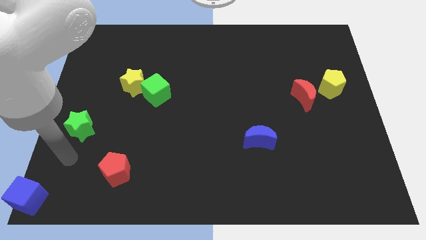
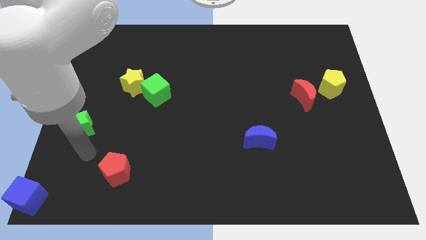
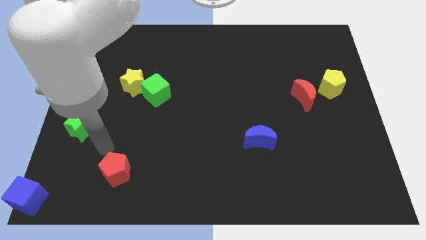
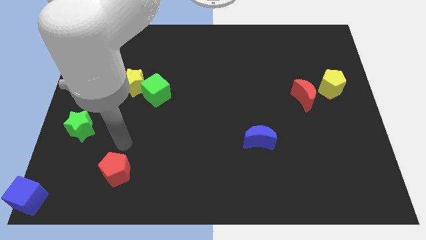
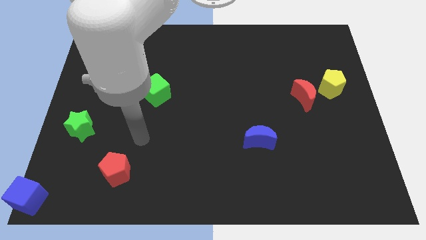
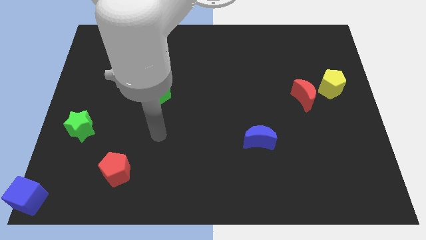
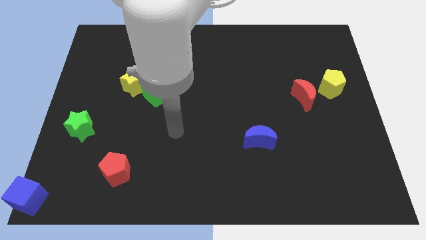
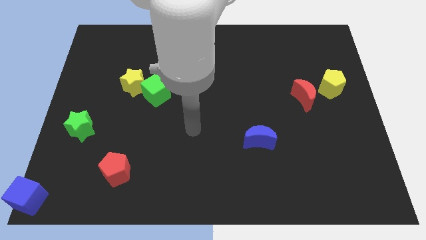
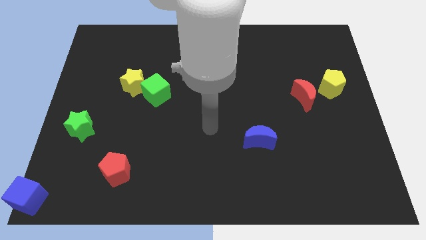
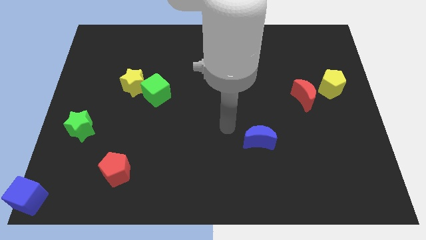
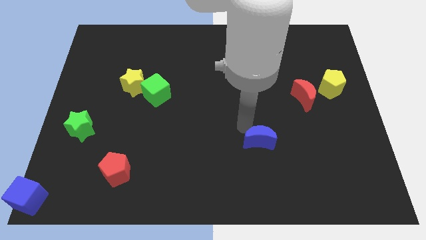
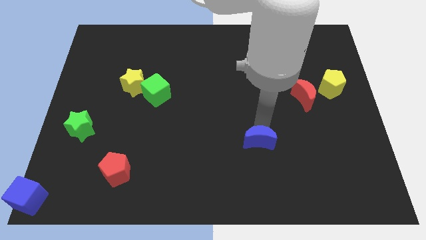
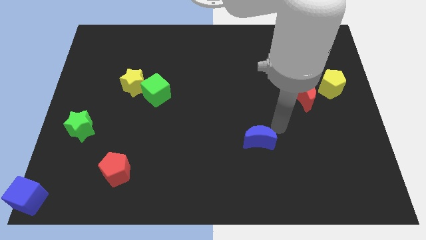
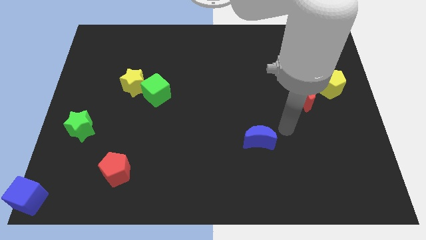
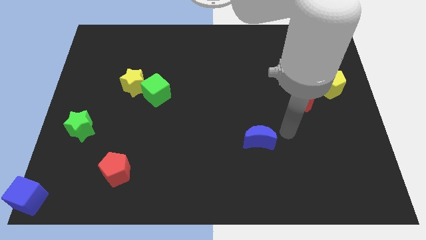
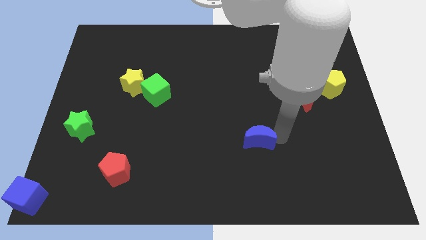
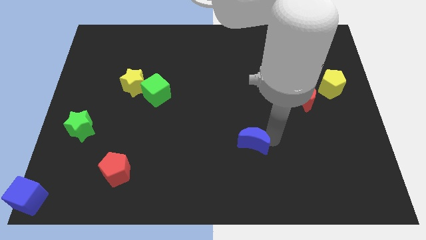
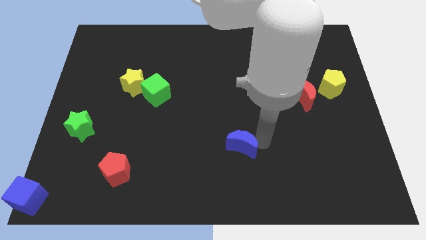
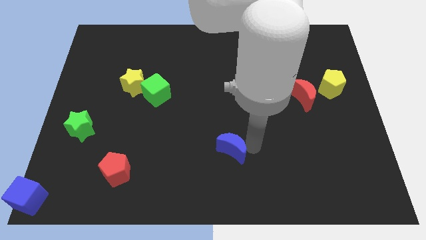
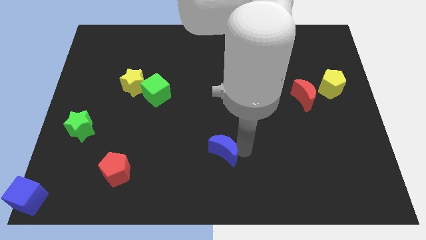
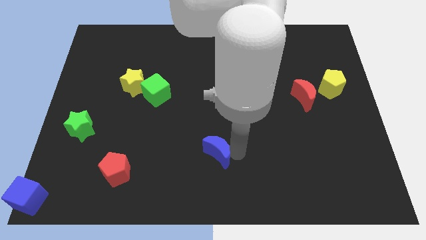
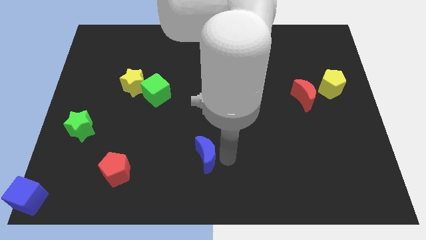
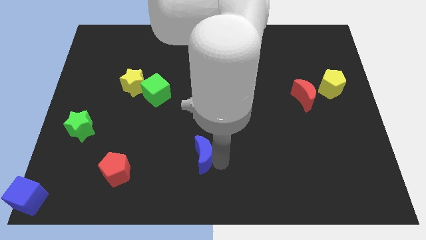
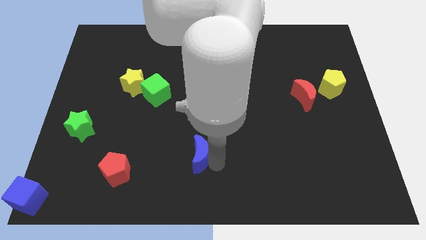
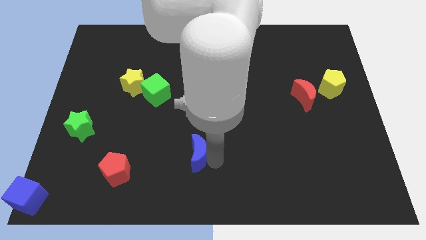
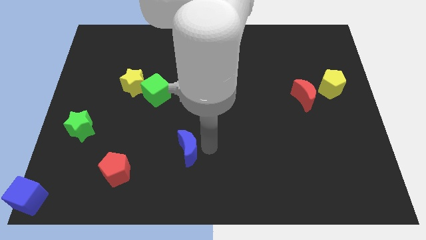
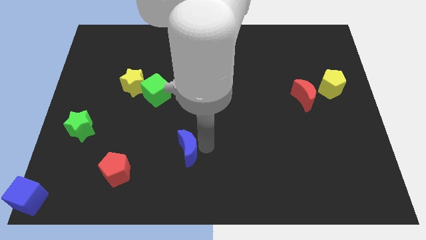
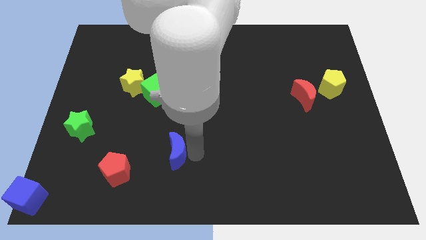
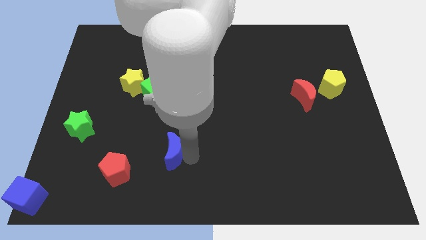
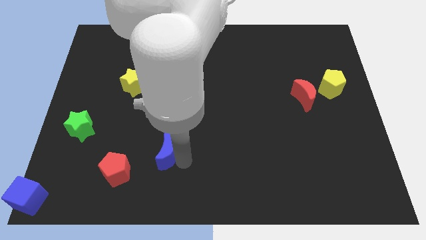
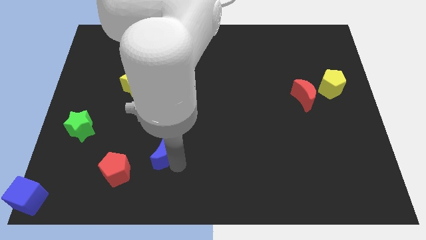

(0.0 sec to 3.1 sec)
place blue crescent below green cube

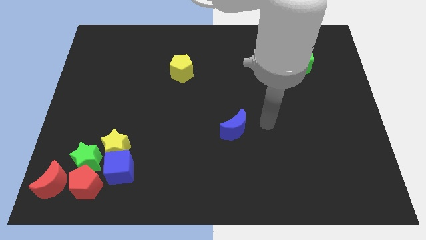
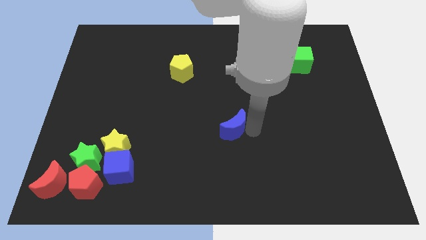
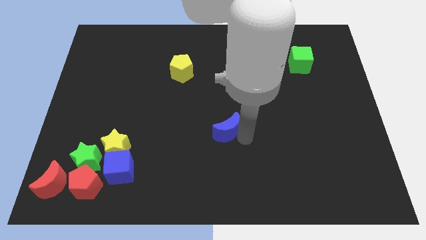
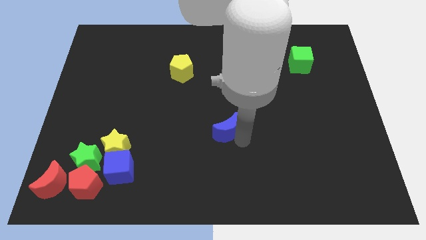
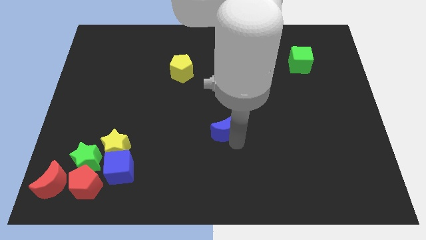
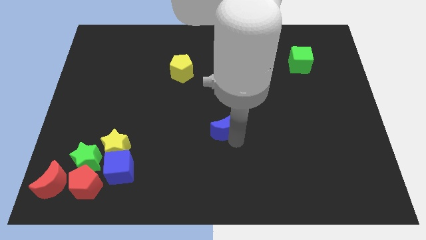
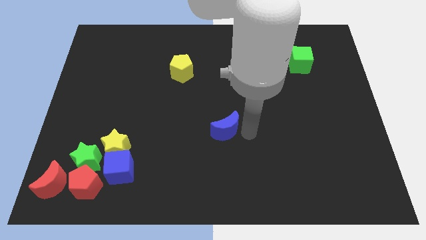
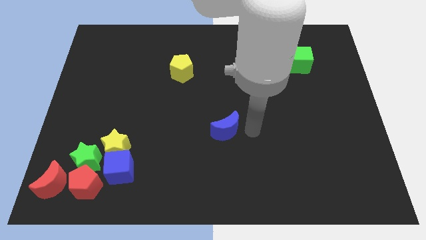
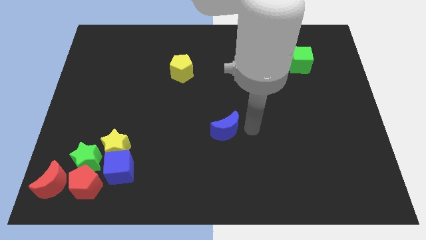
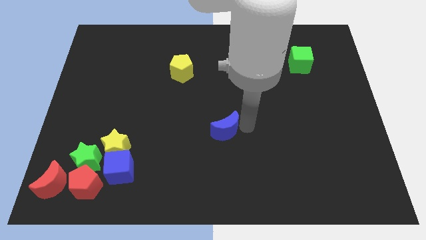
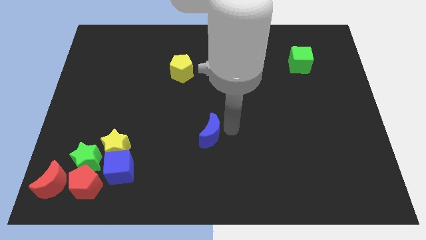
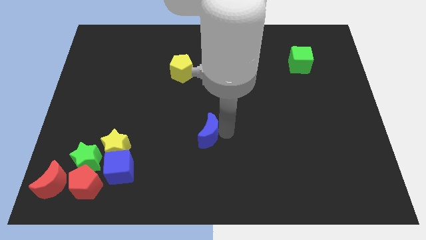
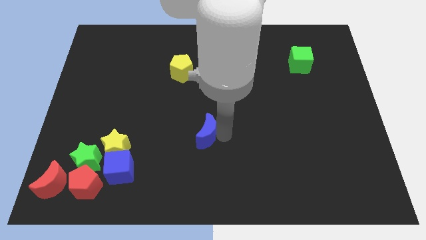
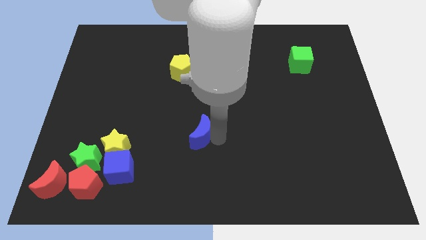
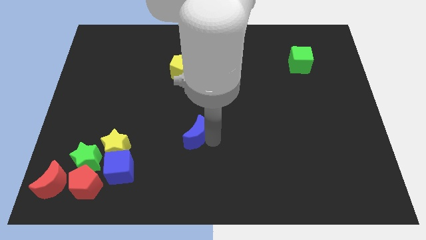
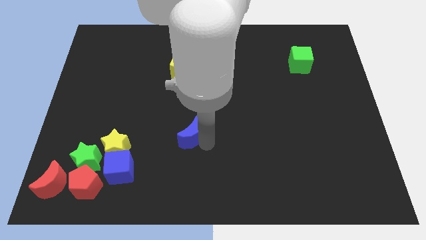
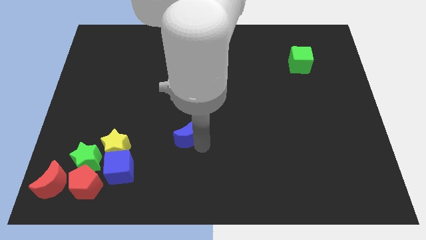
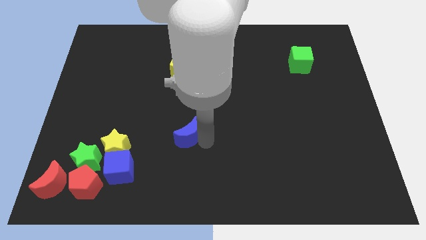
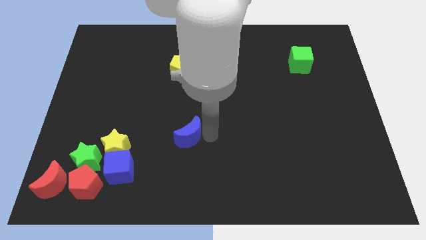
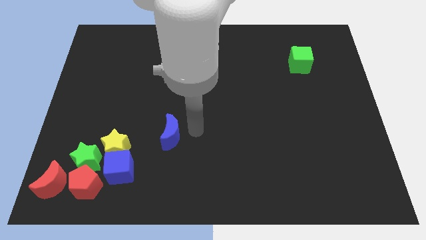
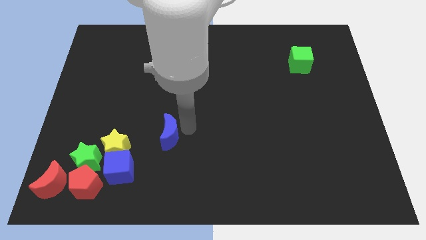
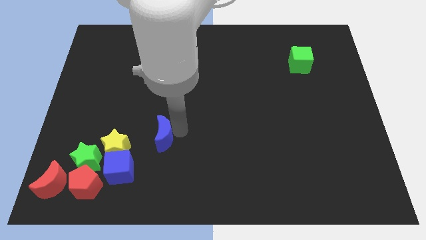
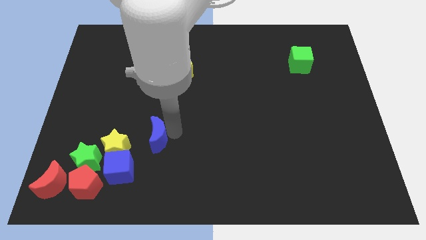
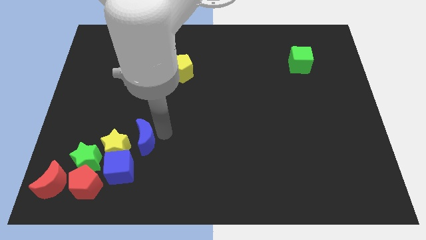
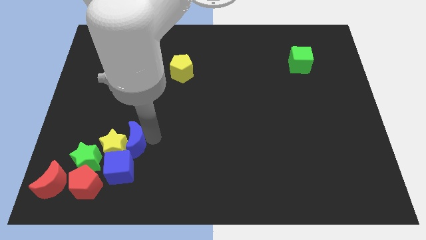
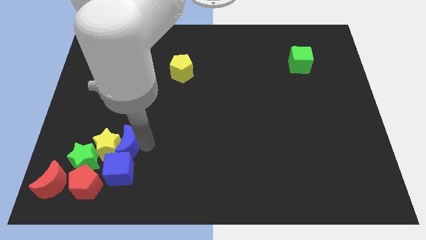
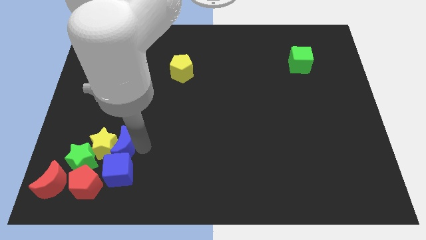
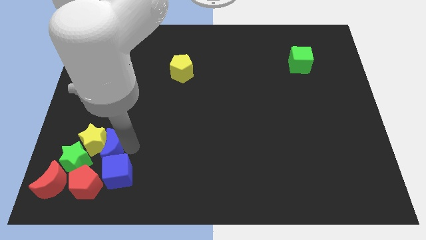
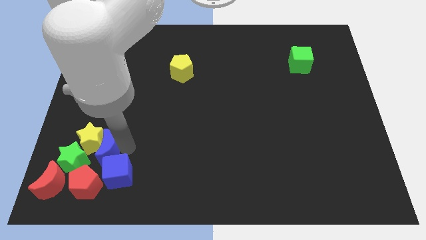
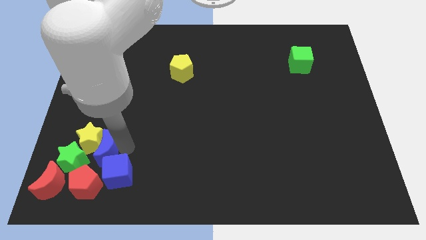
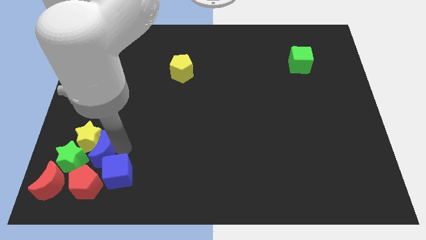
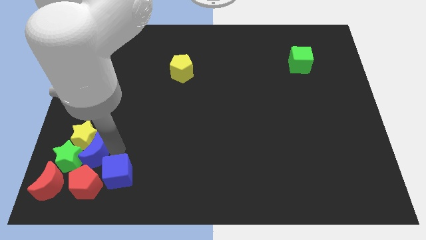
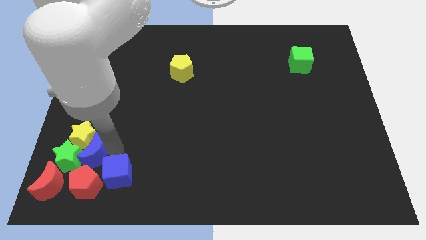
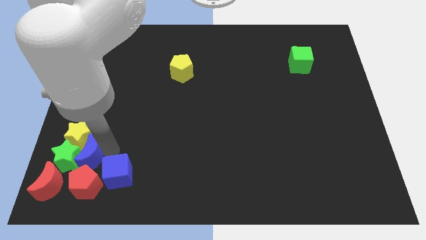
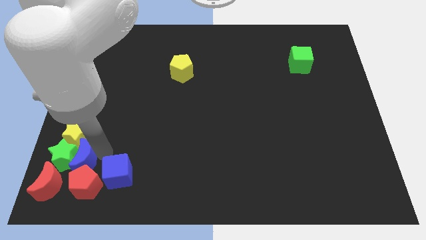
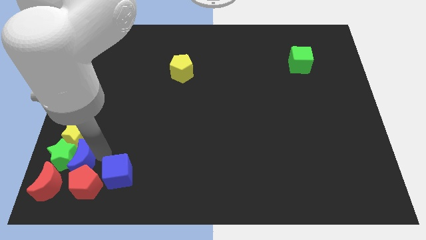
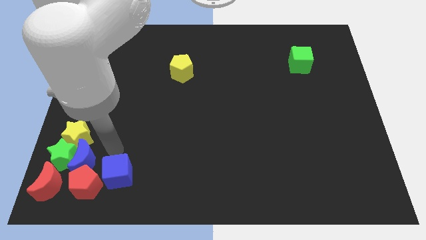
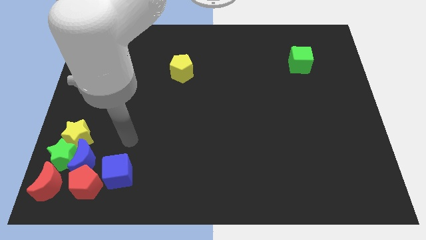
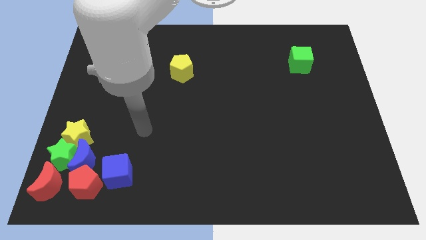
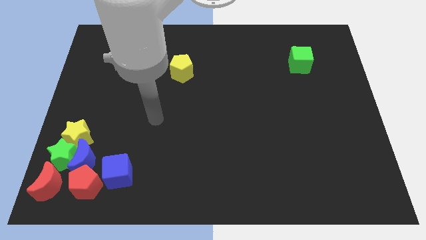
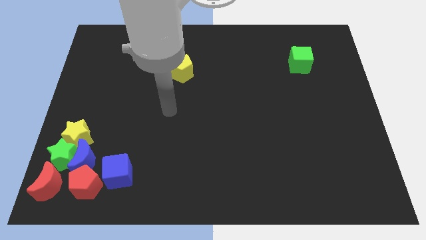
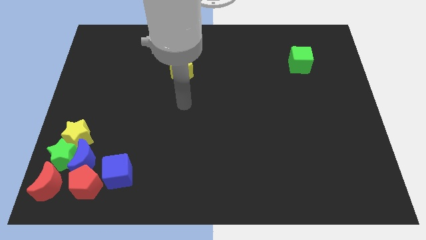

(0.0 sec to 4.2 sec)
push the blue crescent into the green star

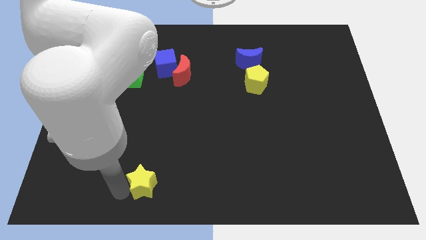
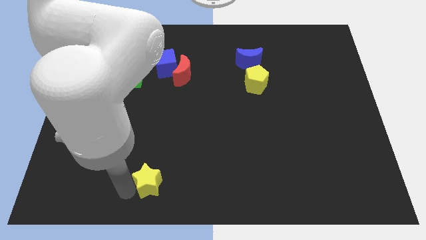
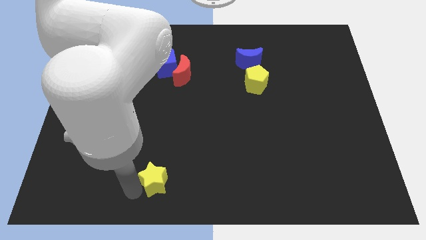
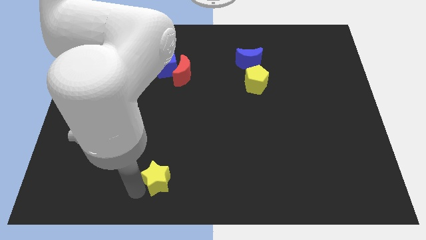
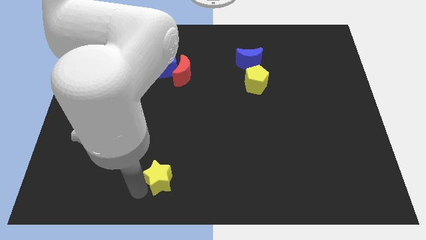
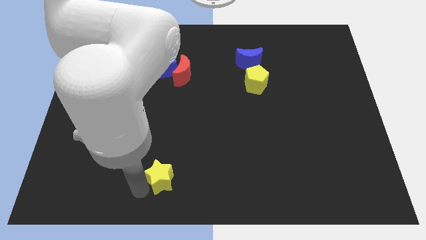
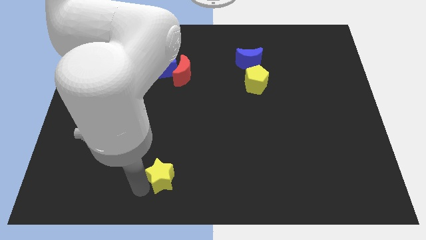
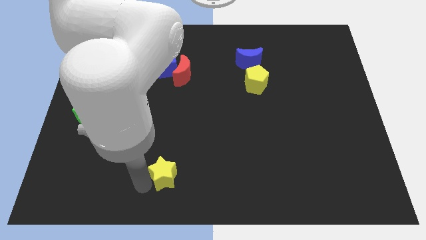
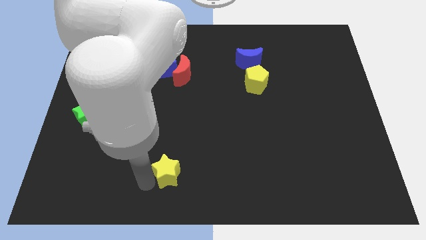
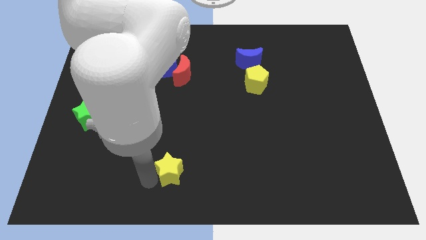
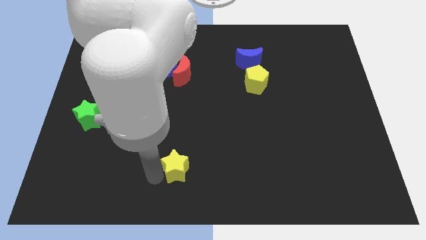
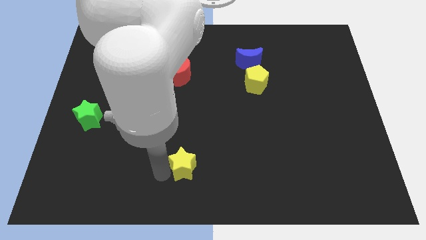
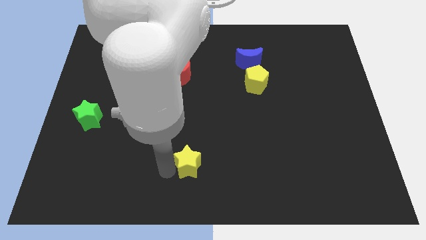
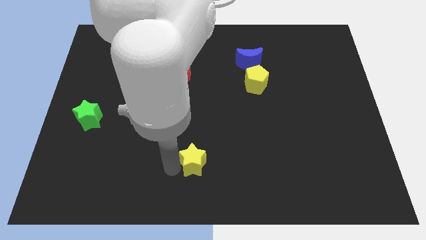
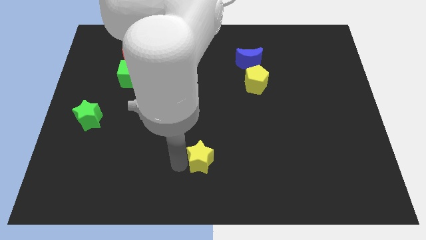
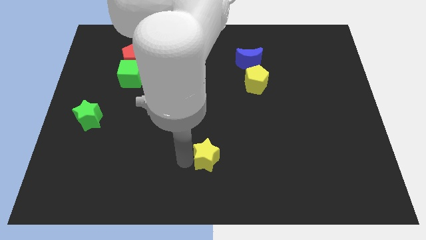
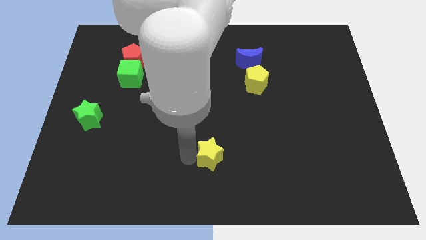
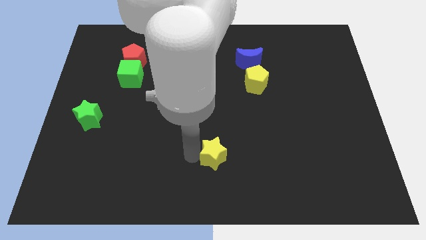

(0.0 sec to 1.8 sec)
push the yellow star slightly towards the right top of the board
